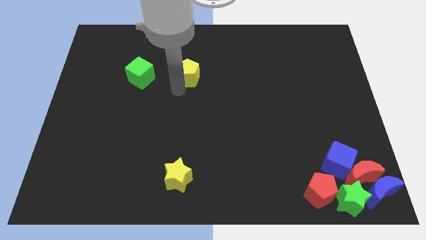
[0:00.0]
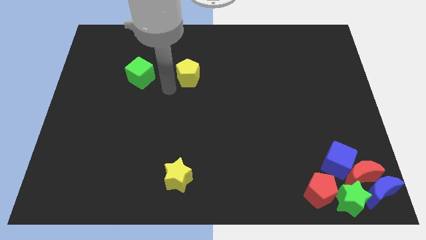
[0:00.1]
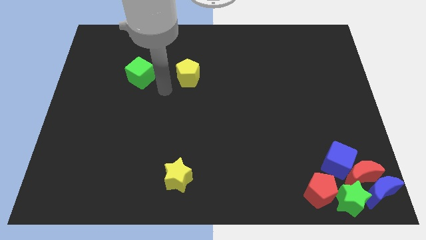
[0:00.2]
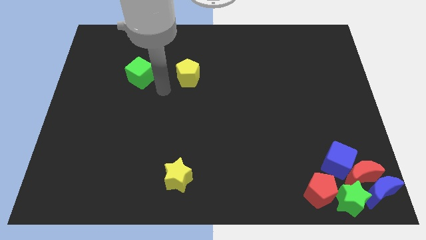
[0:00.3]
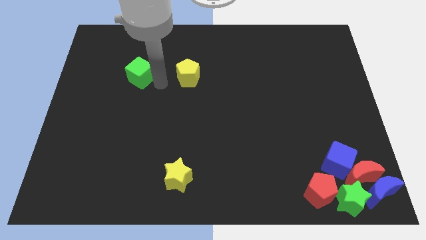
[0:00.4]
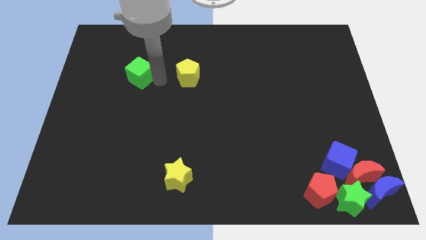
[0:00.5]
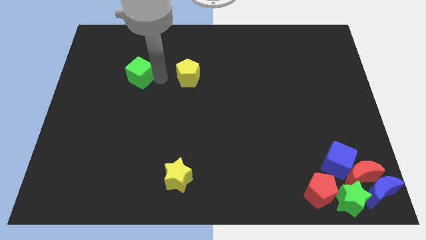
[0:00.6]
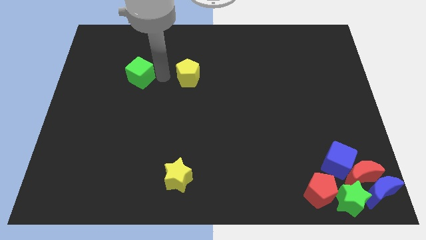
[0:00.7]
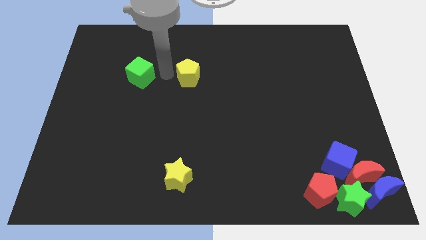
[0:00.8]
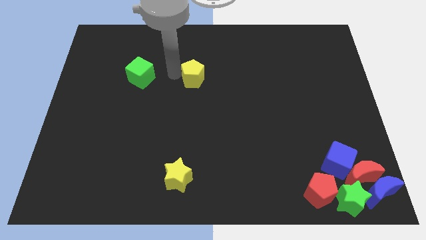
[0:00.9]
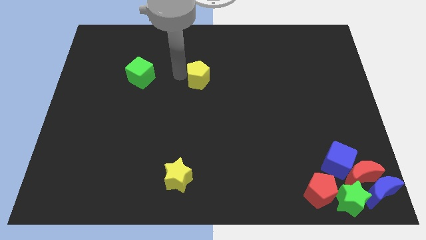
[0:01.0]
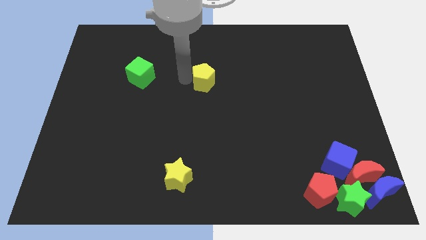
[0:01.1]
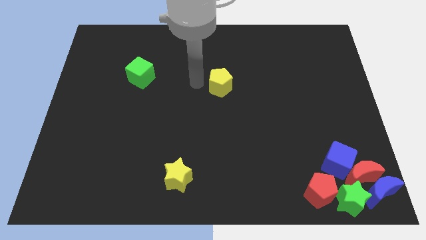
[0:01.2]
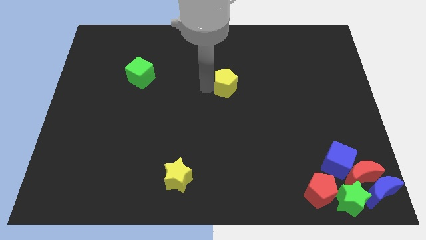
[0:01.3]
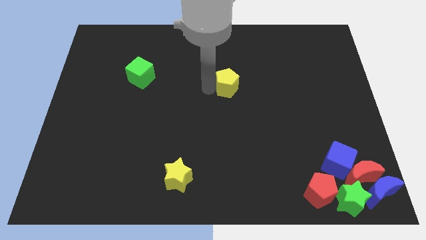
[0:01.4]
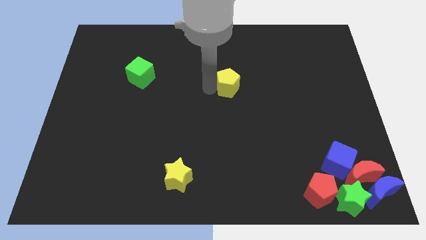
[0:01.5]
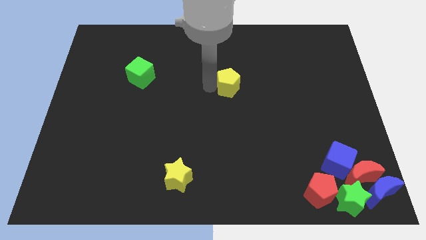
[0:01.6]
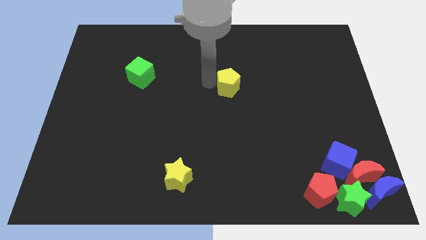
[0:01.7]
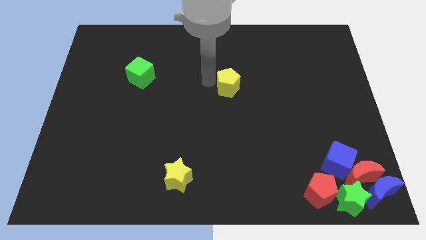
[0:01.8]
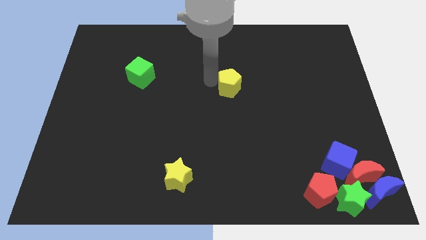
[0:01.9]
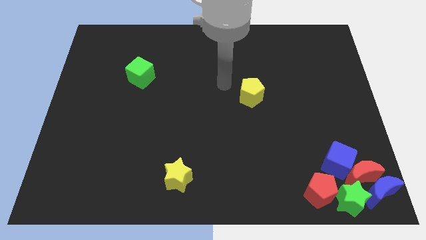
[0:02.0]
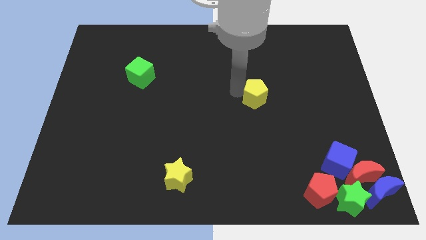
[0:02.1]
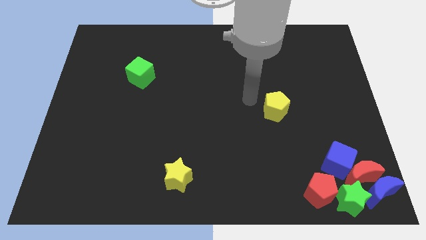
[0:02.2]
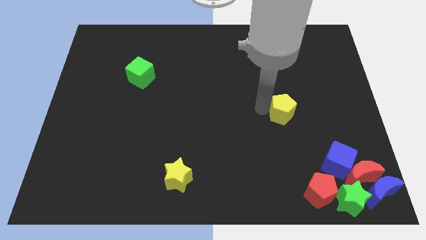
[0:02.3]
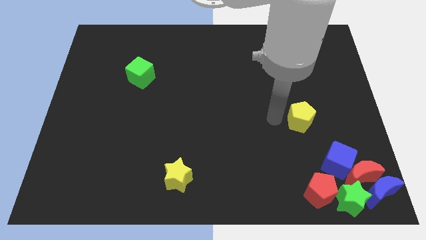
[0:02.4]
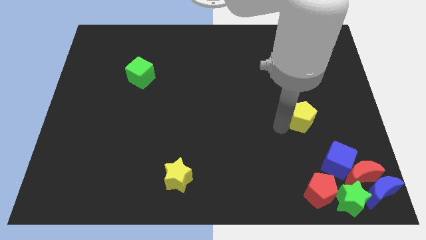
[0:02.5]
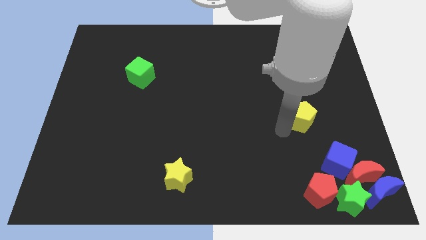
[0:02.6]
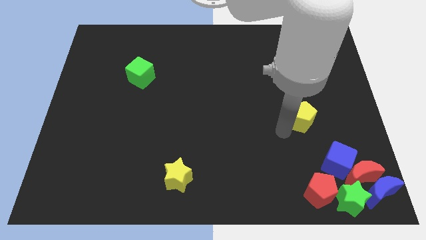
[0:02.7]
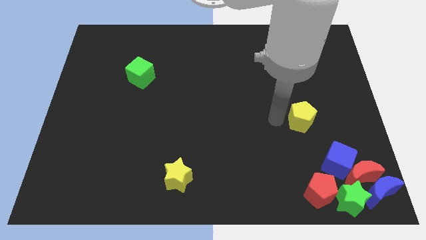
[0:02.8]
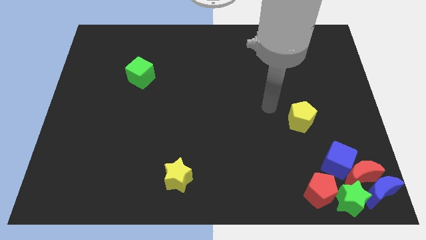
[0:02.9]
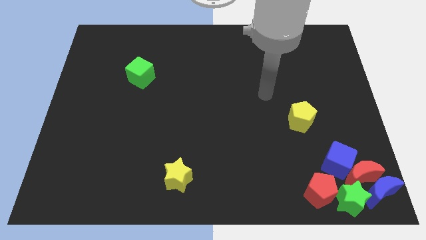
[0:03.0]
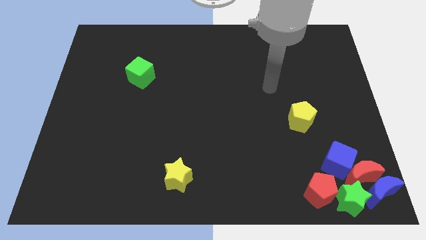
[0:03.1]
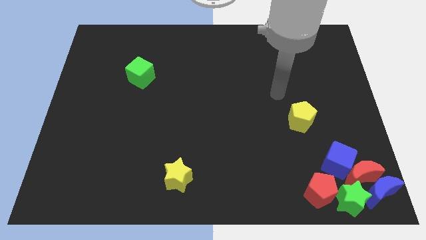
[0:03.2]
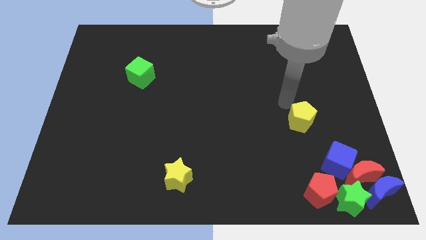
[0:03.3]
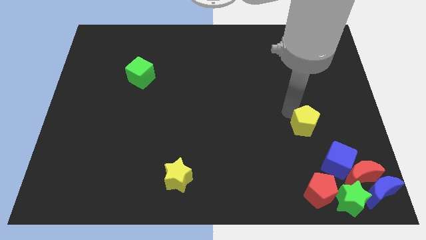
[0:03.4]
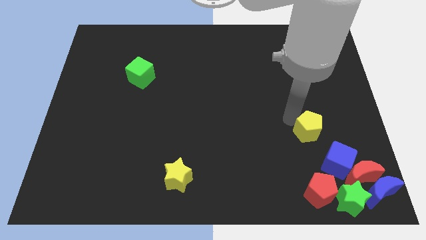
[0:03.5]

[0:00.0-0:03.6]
slide the yellow pentagon diagonally on the top left of the blue cube

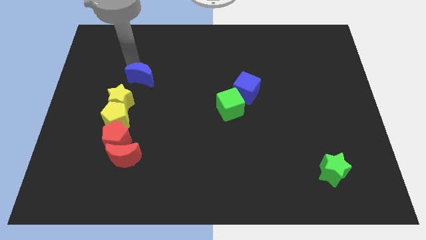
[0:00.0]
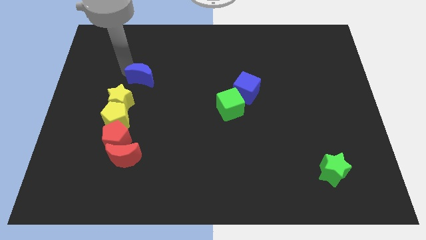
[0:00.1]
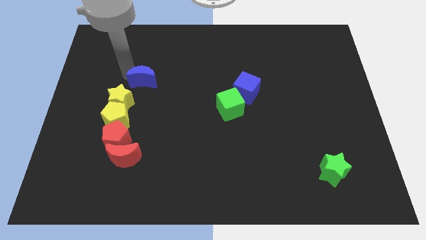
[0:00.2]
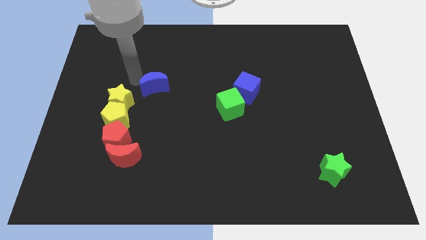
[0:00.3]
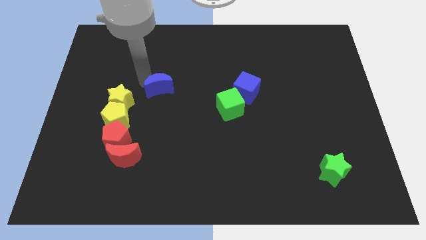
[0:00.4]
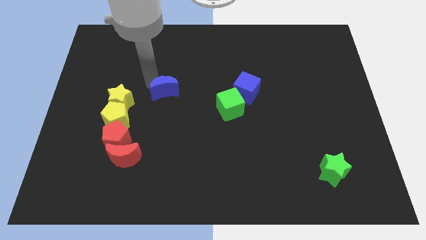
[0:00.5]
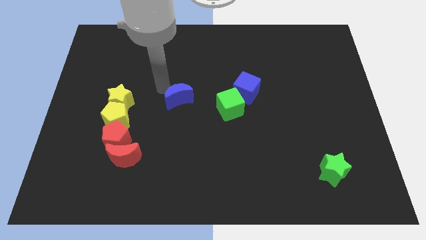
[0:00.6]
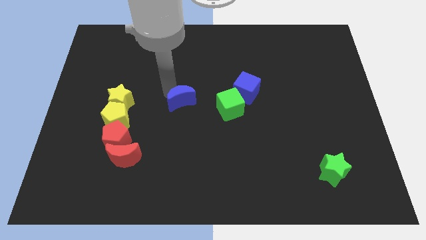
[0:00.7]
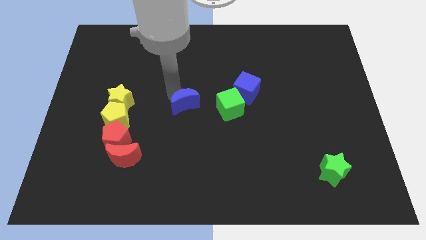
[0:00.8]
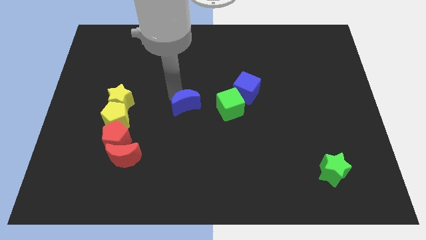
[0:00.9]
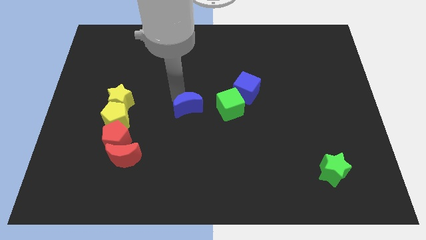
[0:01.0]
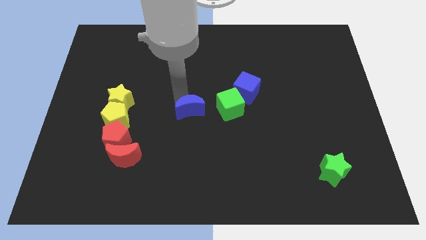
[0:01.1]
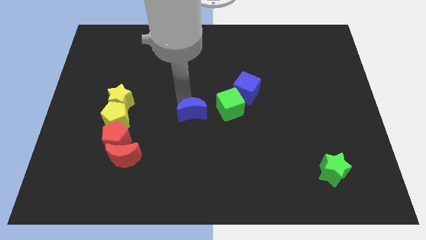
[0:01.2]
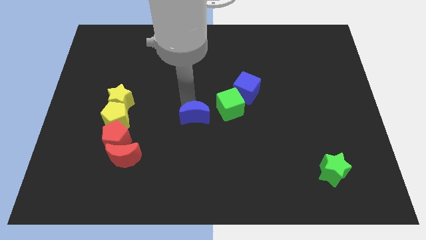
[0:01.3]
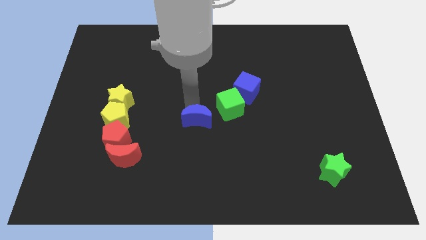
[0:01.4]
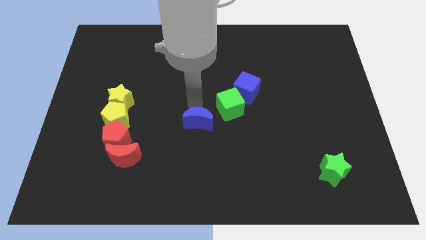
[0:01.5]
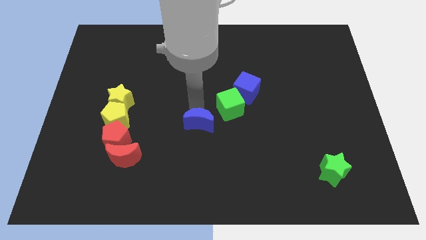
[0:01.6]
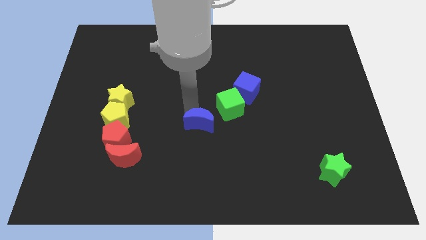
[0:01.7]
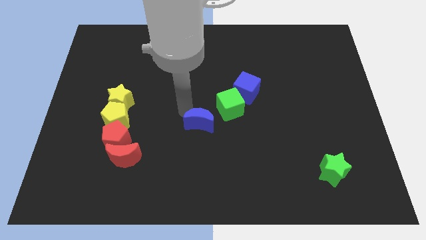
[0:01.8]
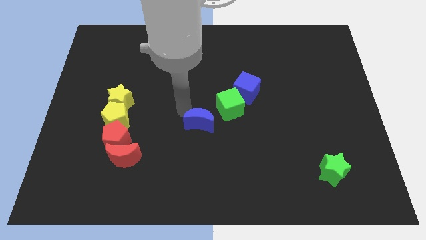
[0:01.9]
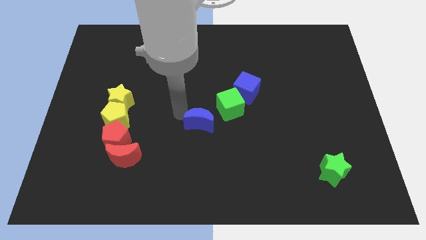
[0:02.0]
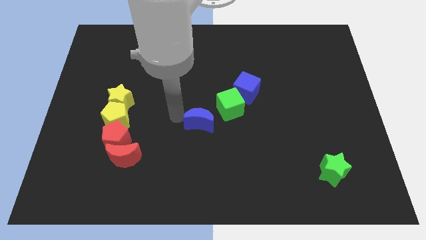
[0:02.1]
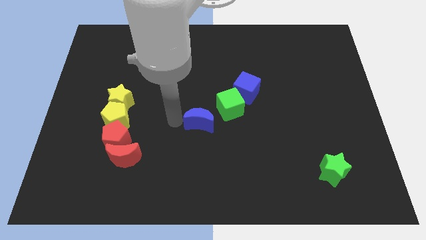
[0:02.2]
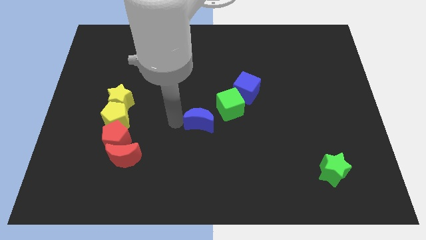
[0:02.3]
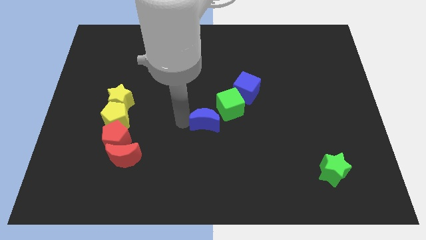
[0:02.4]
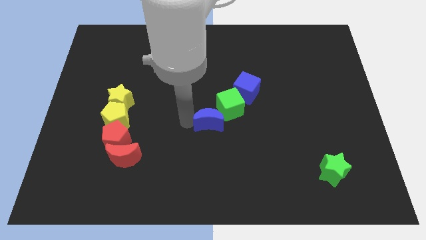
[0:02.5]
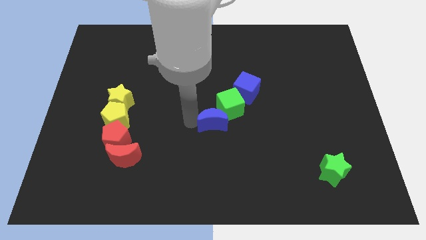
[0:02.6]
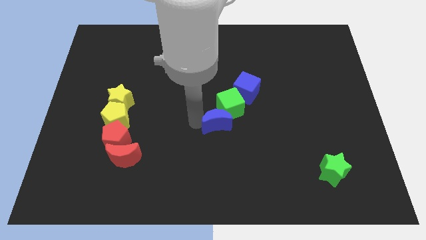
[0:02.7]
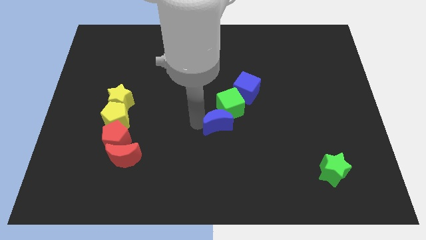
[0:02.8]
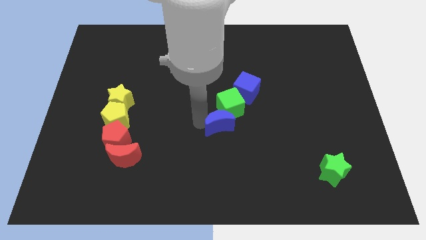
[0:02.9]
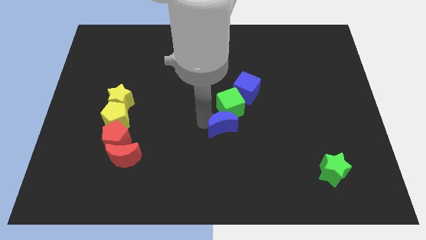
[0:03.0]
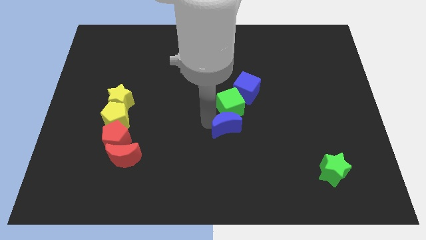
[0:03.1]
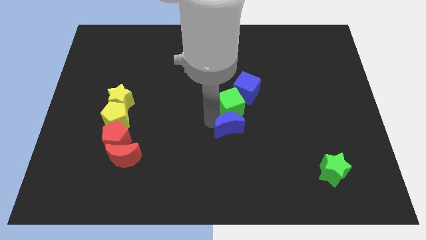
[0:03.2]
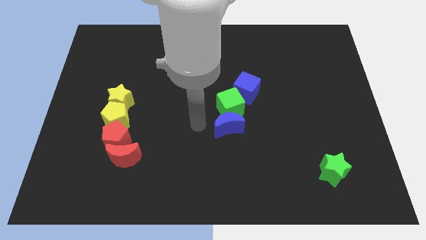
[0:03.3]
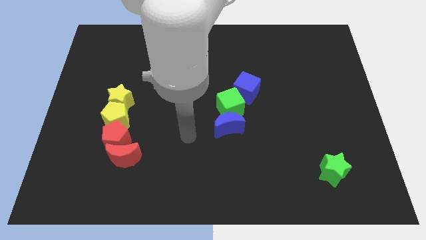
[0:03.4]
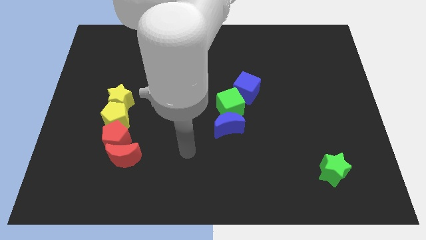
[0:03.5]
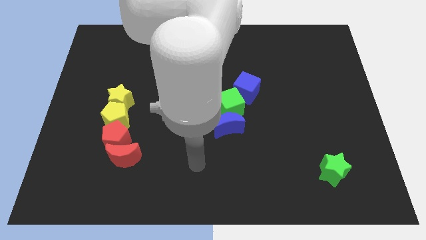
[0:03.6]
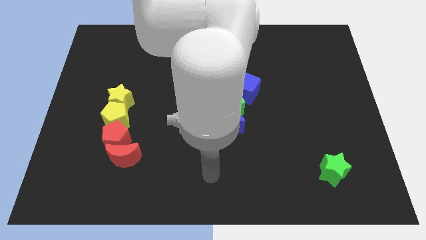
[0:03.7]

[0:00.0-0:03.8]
place the blue moon at the bottom of green cube

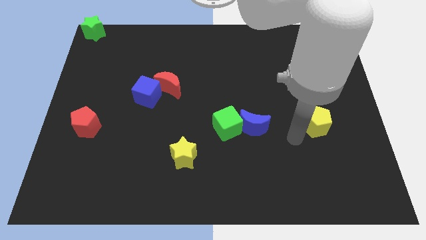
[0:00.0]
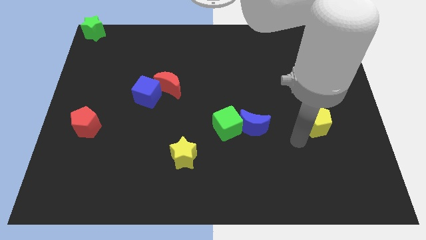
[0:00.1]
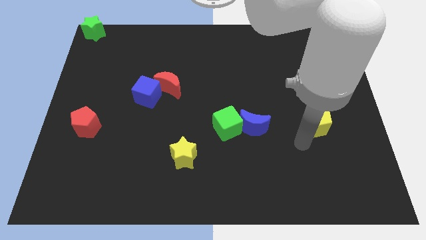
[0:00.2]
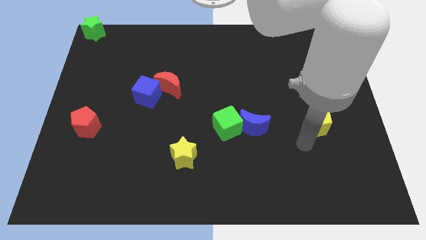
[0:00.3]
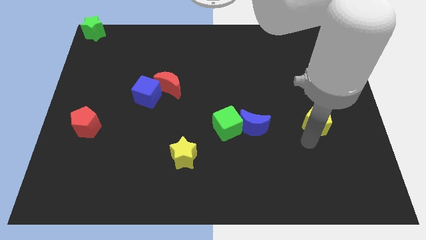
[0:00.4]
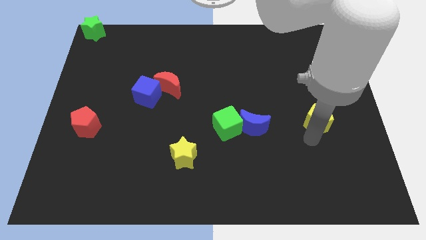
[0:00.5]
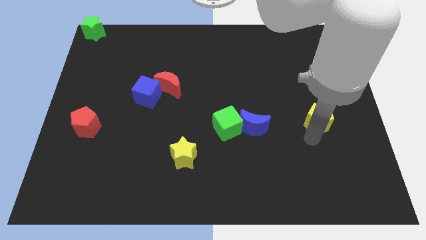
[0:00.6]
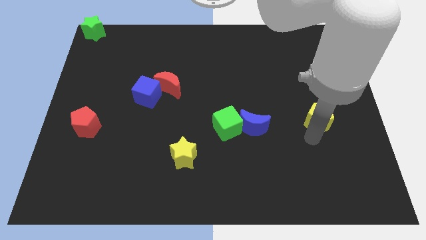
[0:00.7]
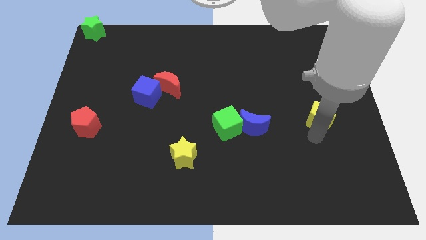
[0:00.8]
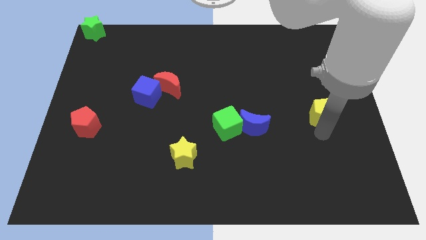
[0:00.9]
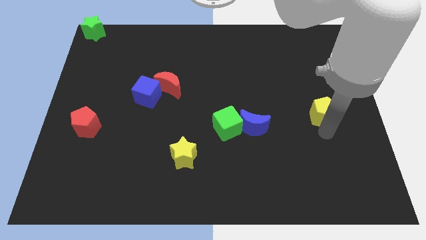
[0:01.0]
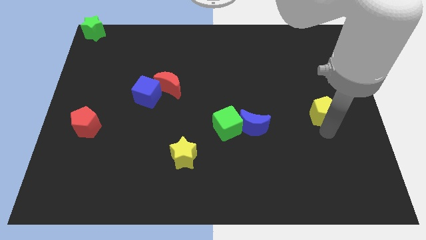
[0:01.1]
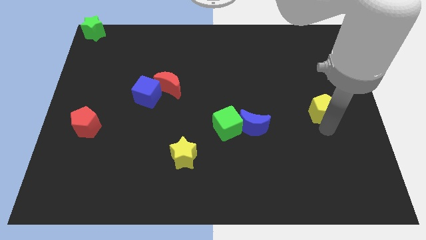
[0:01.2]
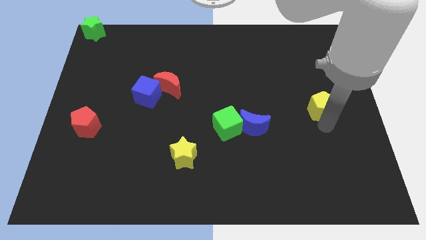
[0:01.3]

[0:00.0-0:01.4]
push the yellow pentagon slightly upwards of the board

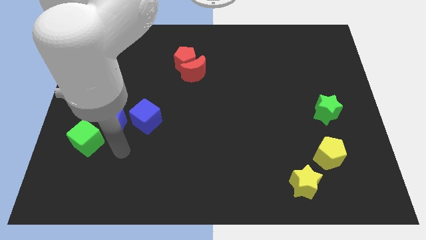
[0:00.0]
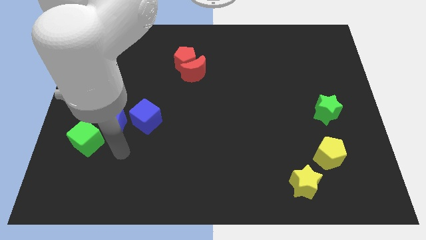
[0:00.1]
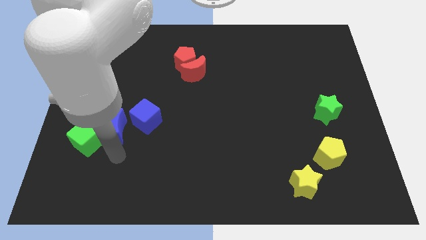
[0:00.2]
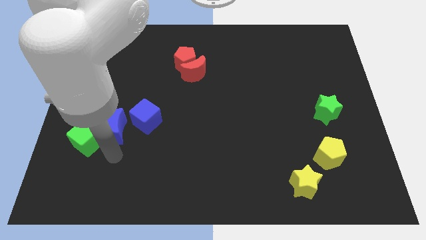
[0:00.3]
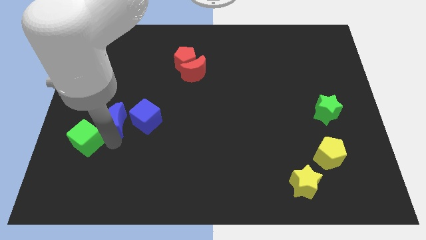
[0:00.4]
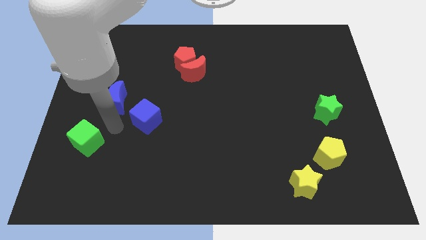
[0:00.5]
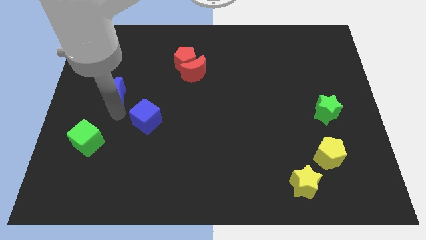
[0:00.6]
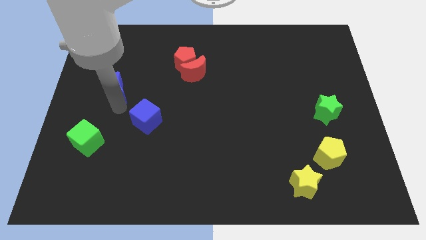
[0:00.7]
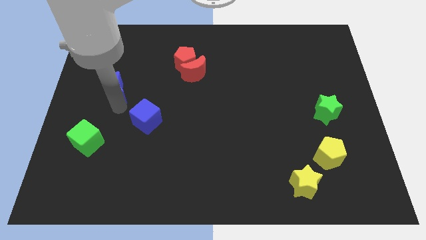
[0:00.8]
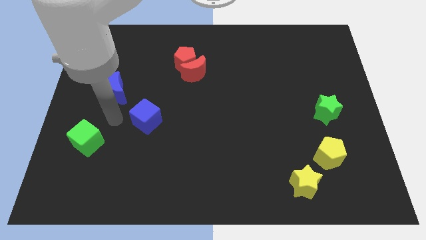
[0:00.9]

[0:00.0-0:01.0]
separate the blue crescent from the blue cube
